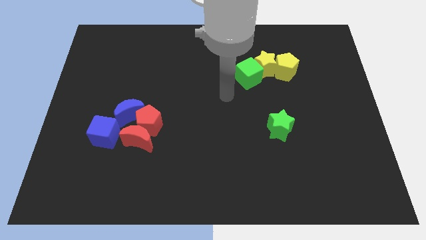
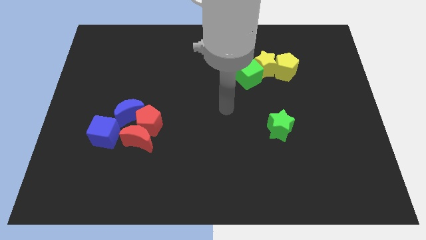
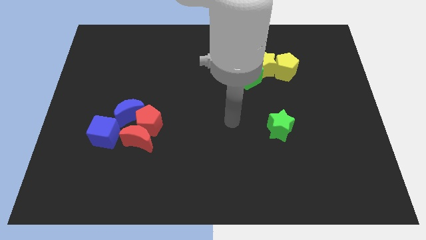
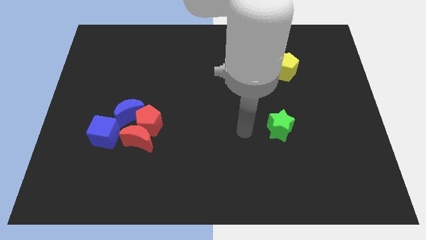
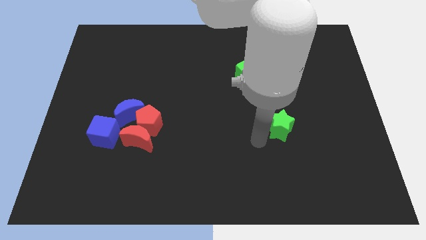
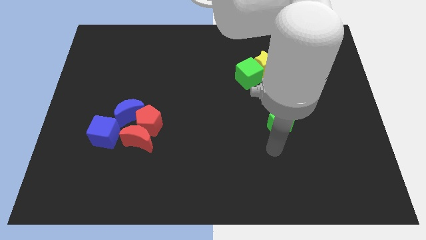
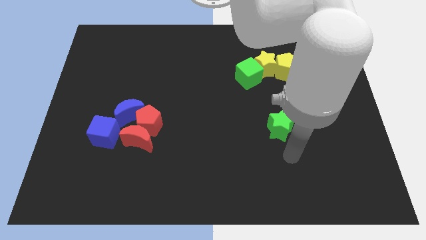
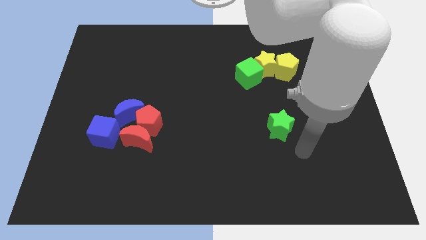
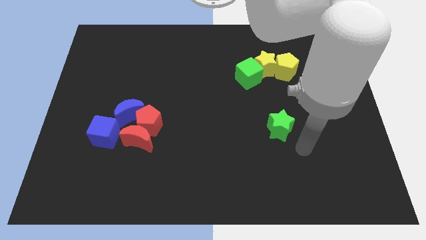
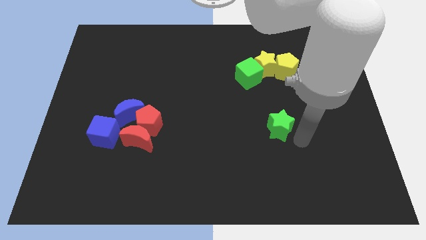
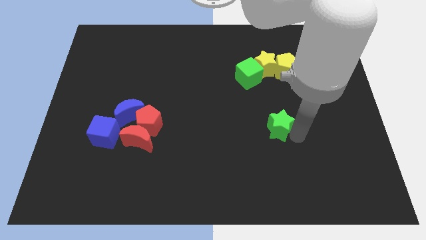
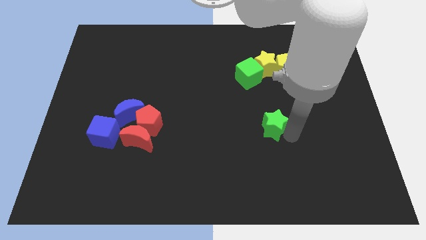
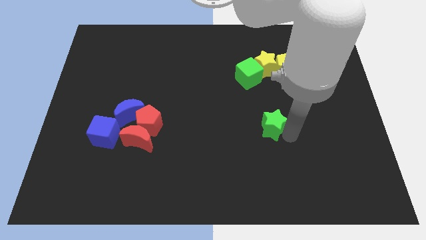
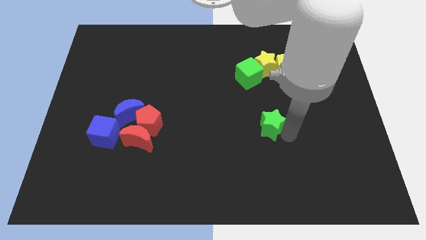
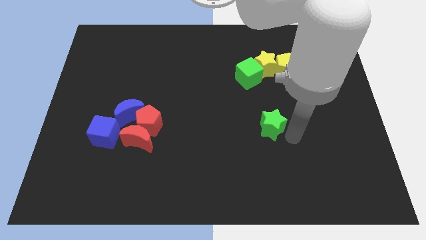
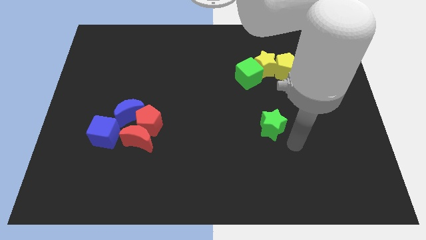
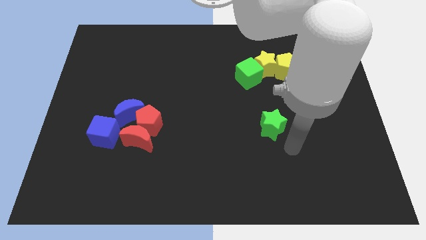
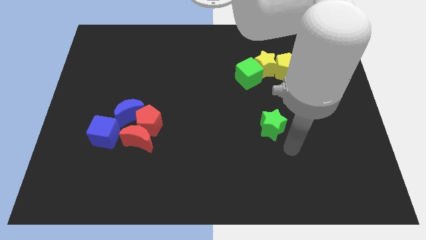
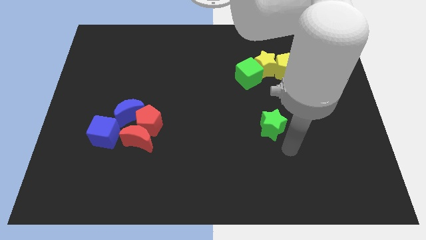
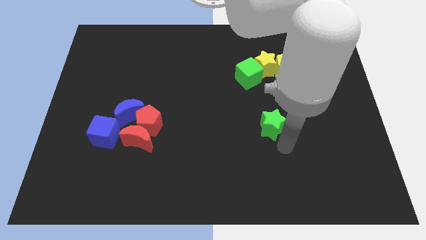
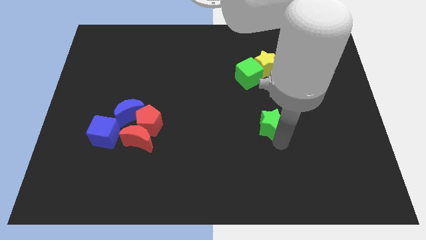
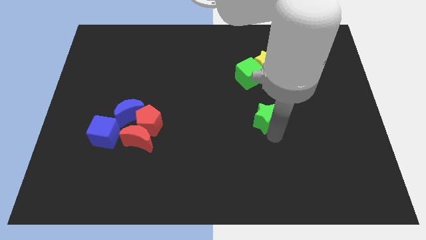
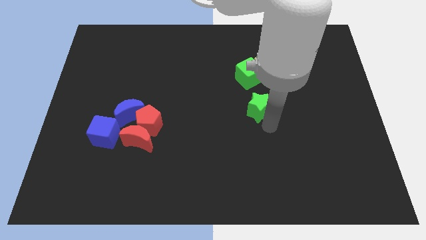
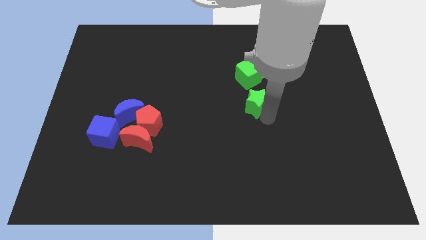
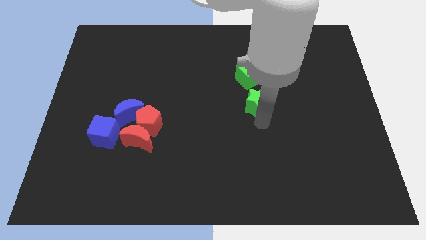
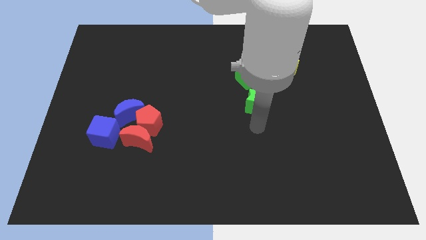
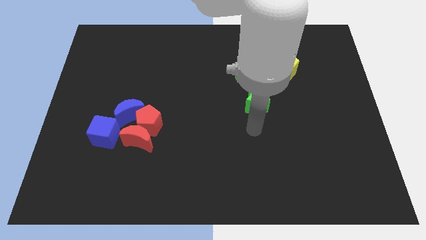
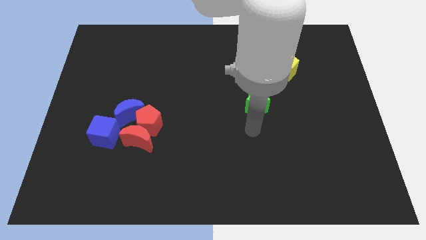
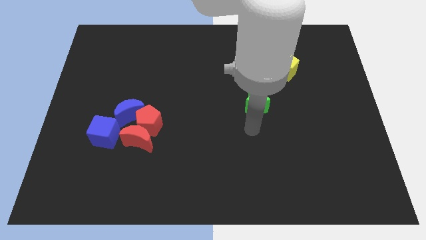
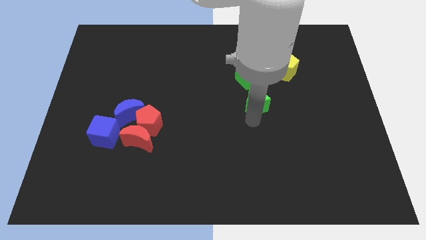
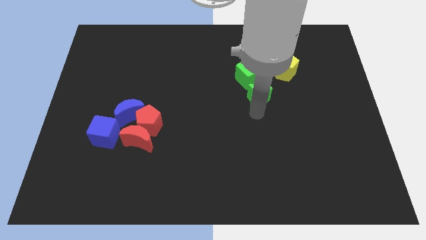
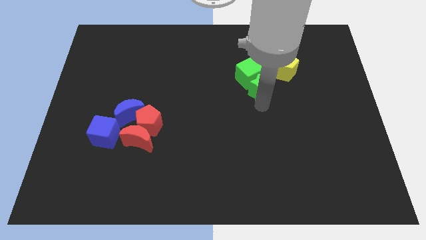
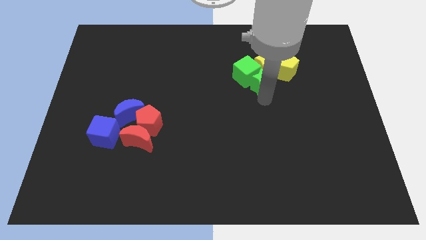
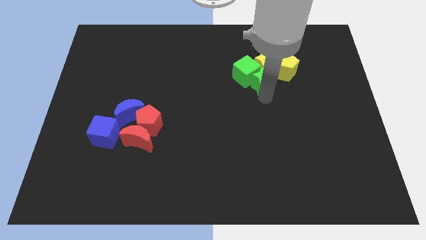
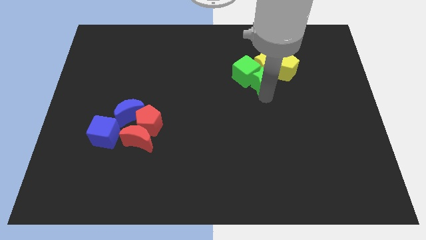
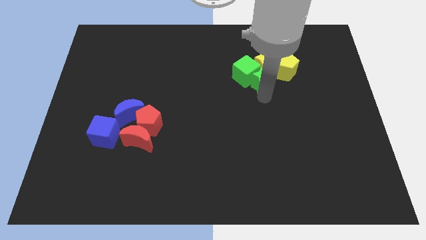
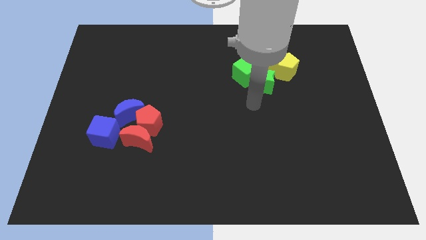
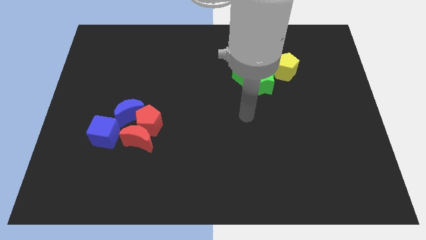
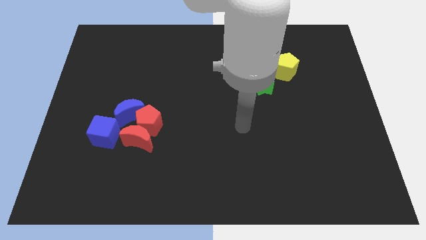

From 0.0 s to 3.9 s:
move the green star into the green cube

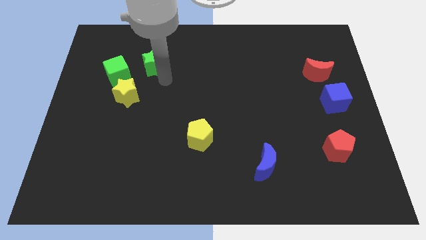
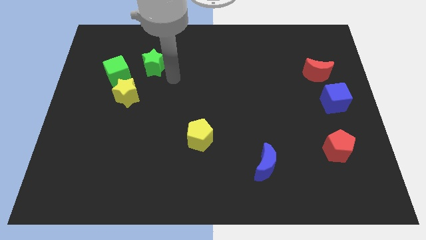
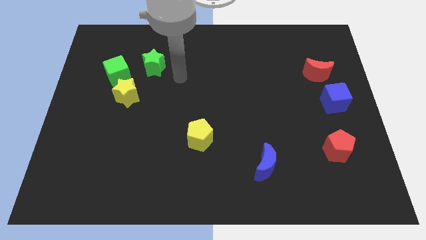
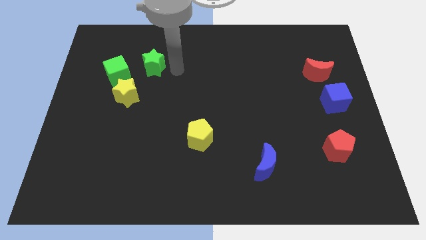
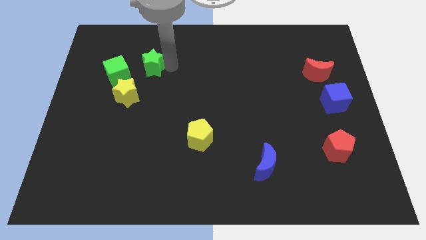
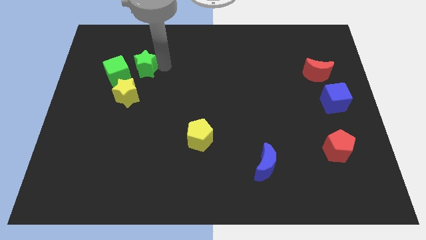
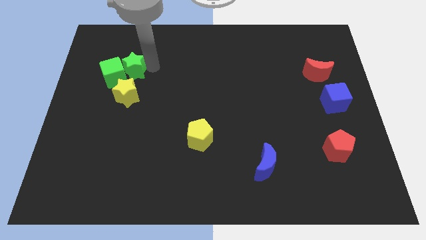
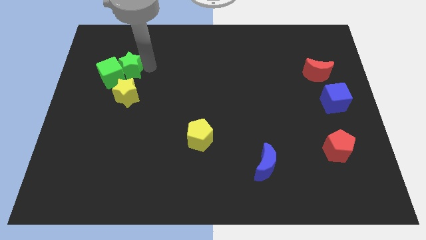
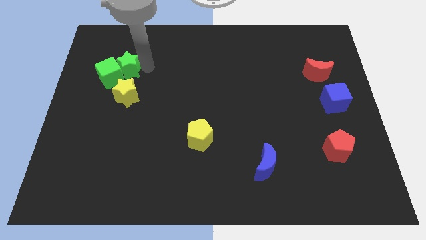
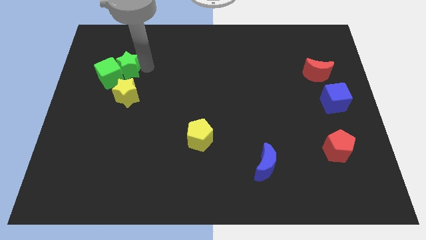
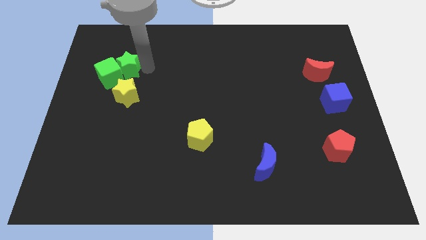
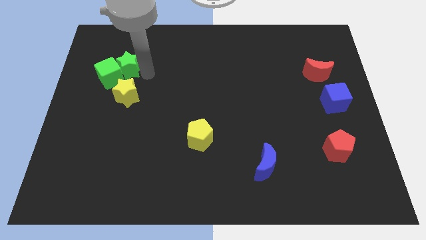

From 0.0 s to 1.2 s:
push the green star into the green cube

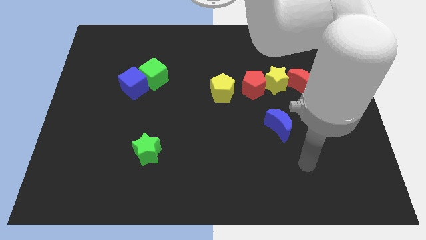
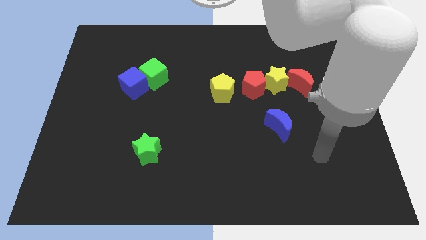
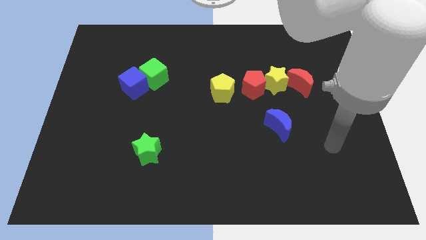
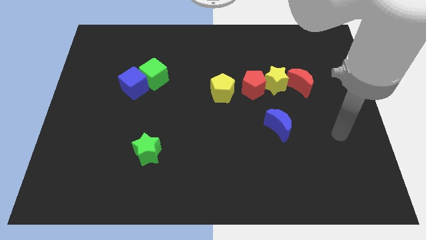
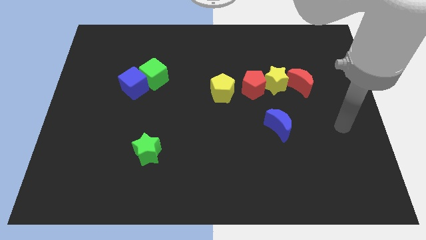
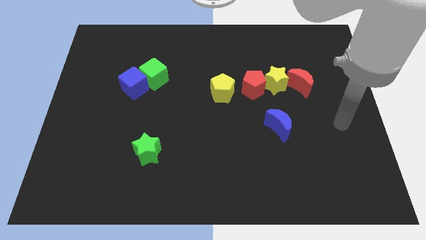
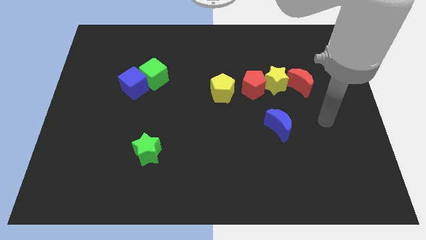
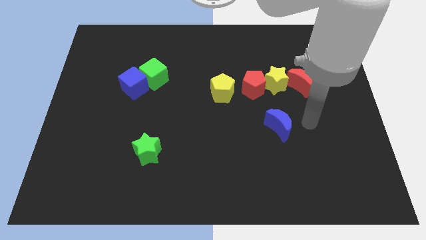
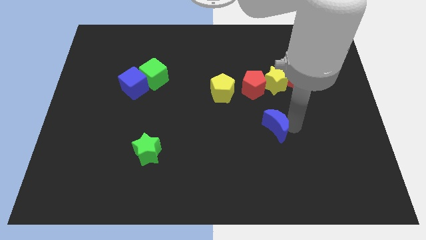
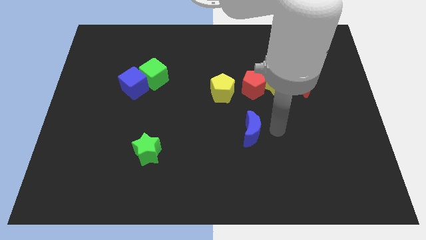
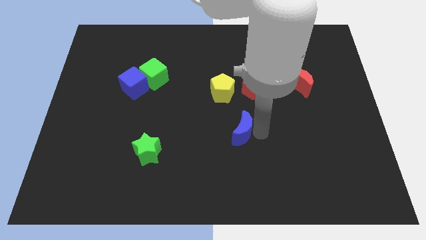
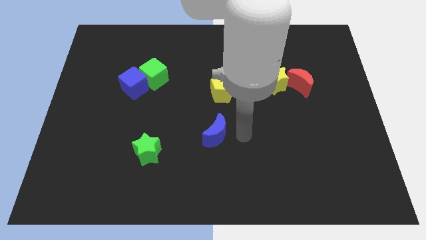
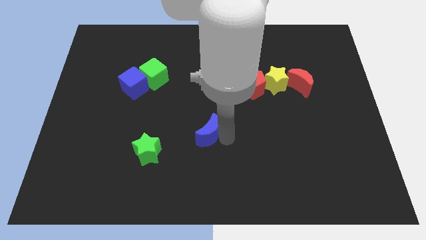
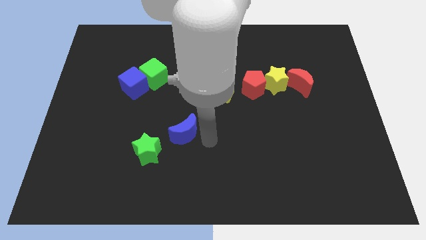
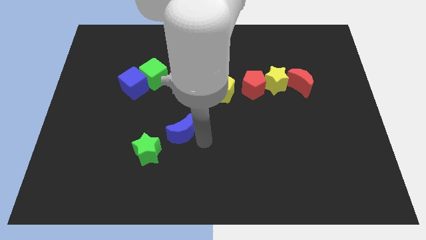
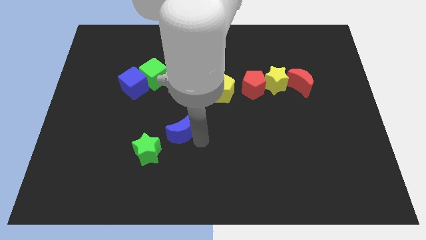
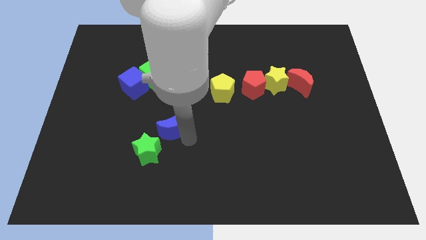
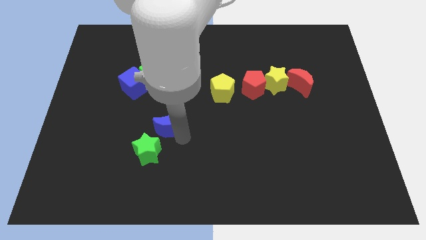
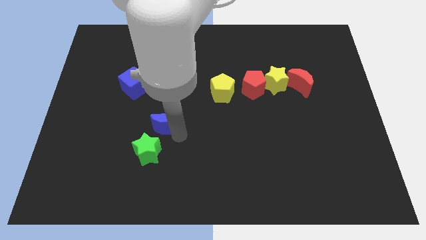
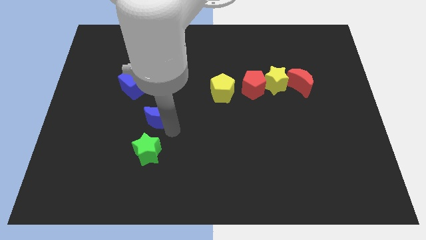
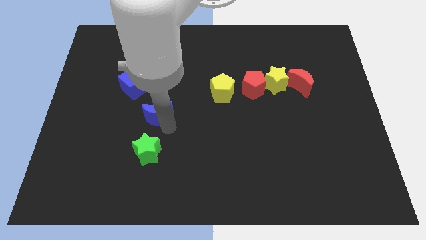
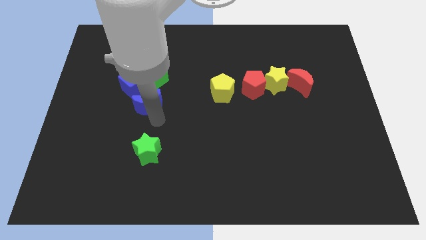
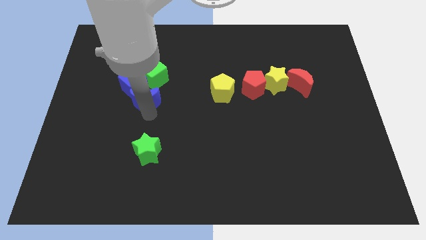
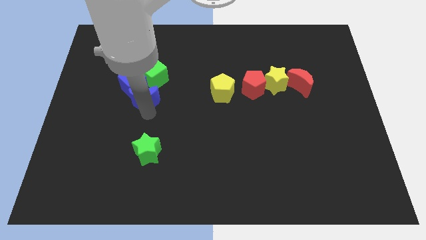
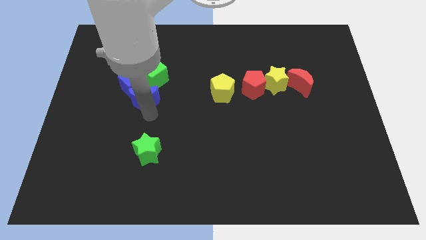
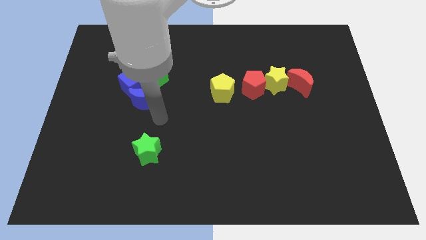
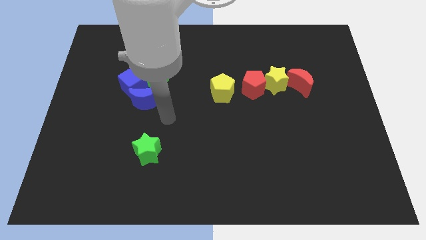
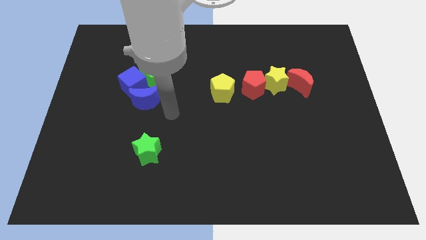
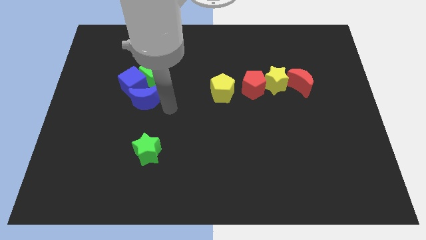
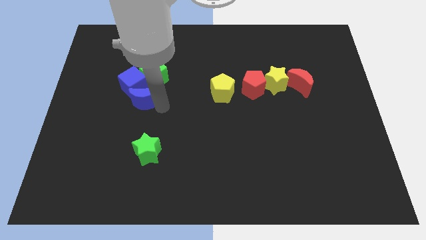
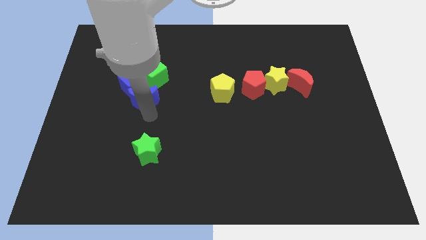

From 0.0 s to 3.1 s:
push blue moon into blue cube

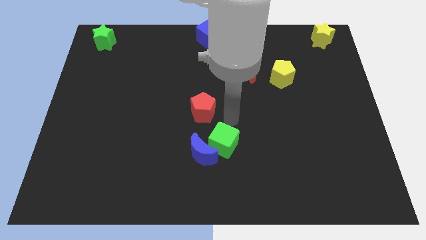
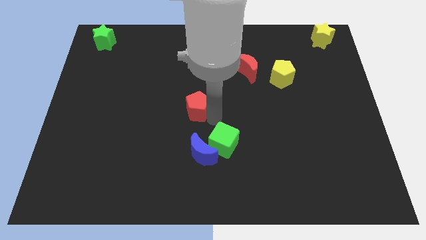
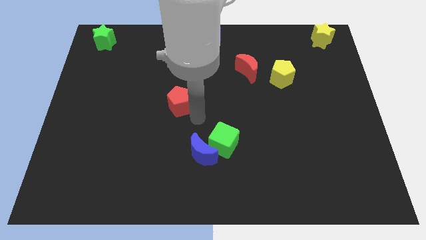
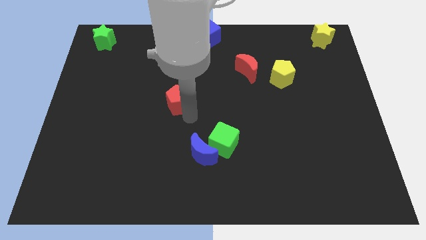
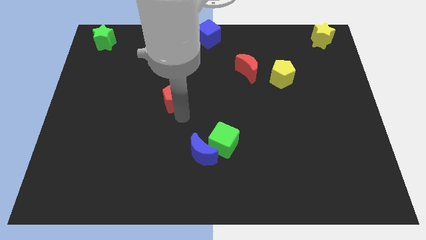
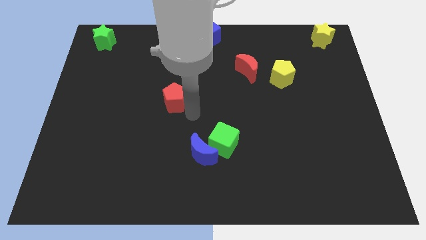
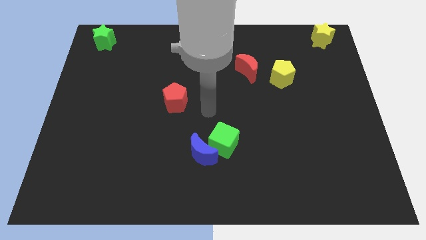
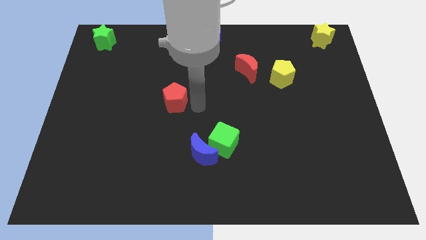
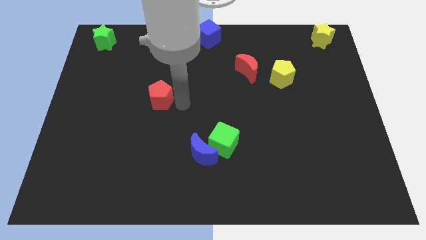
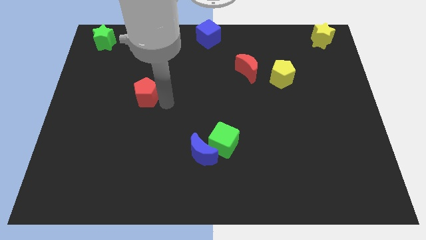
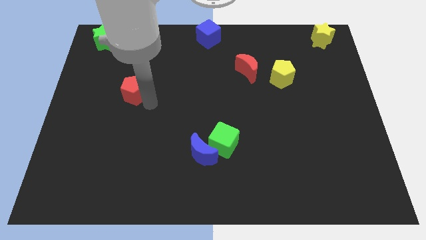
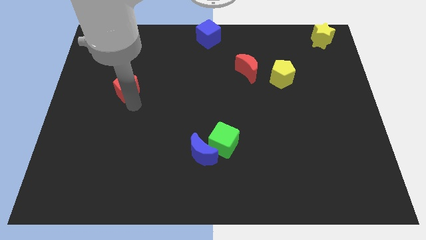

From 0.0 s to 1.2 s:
drag the red pentagon diagonally top left to the blue moon
